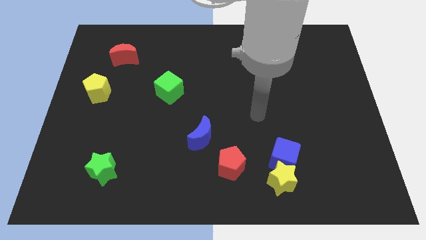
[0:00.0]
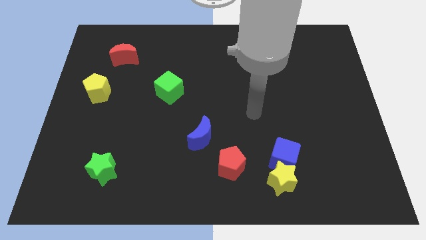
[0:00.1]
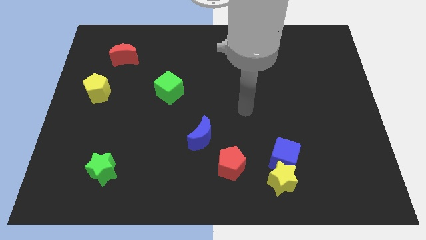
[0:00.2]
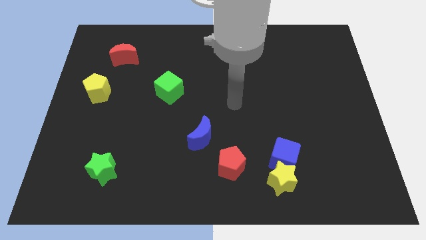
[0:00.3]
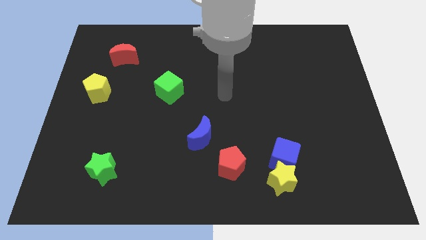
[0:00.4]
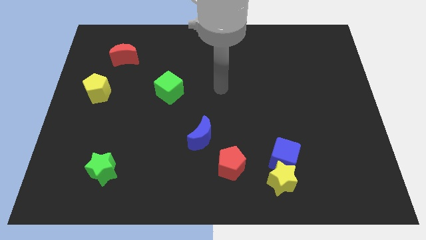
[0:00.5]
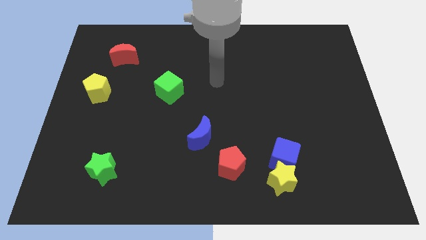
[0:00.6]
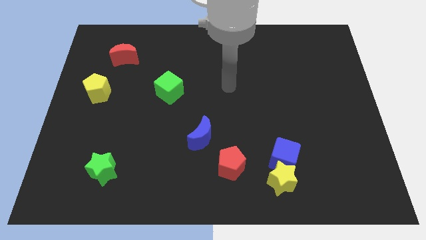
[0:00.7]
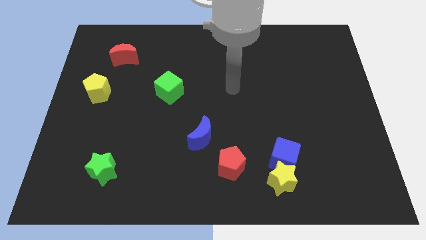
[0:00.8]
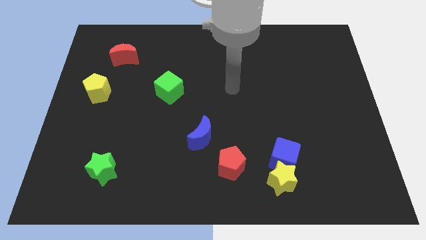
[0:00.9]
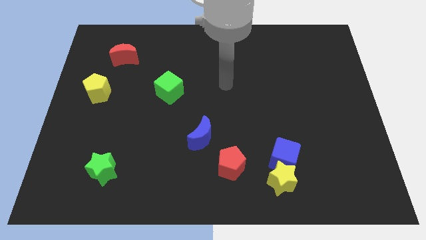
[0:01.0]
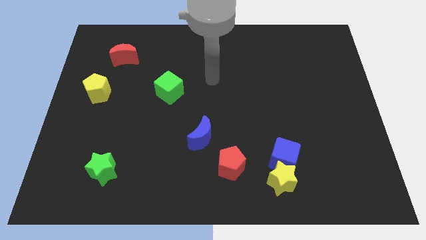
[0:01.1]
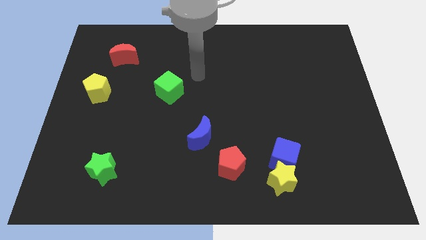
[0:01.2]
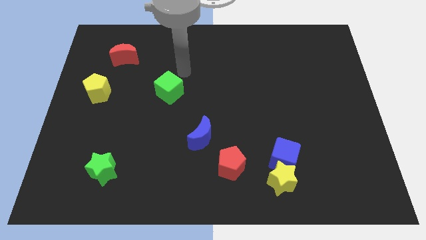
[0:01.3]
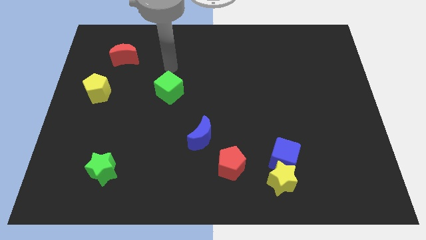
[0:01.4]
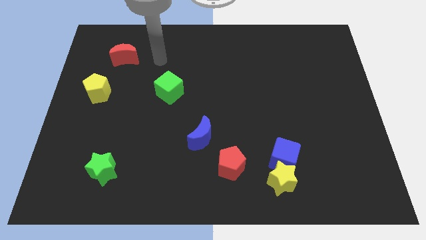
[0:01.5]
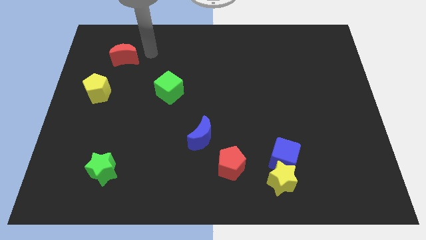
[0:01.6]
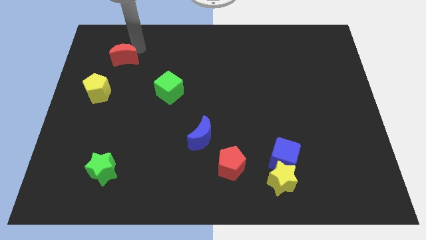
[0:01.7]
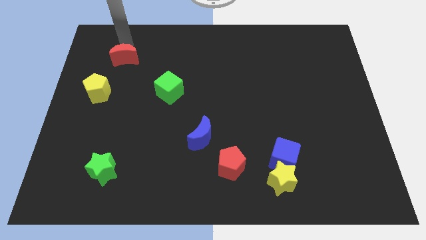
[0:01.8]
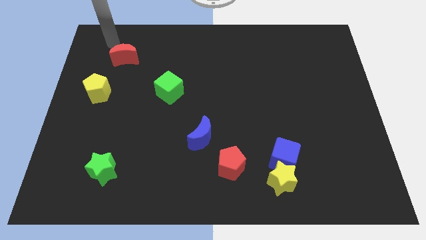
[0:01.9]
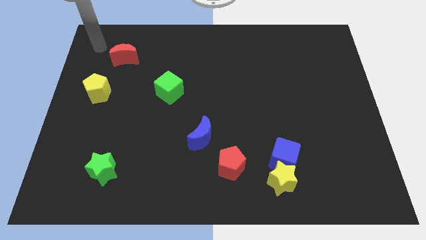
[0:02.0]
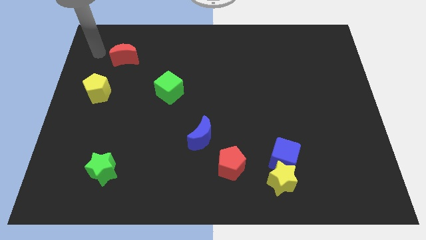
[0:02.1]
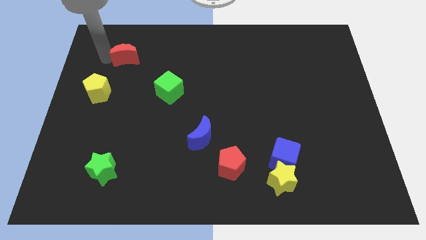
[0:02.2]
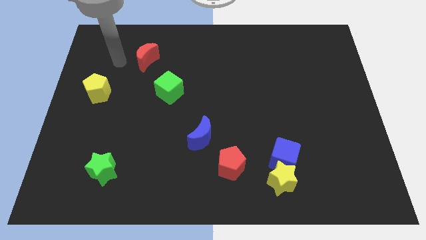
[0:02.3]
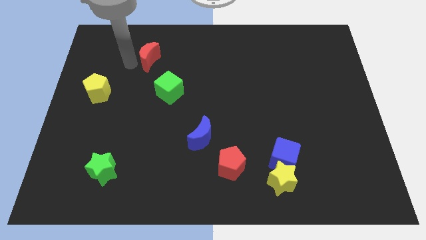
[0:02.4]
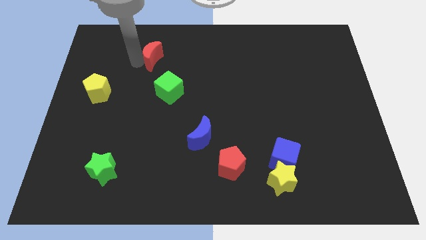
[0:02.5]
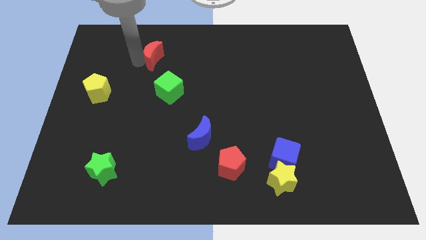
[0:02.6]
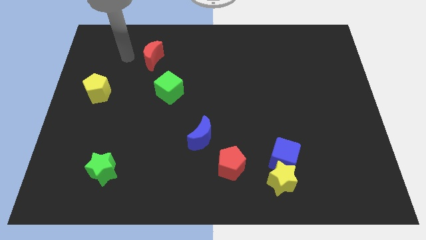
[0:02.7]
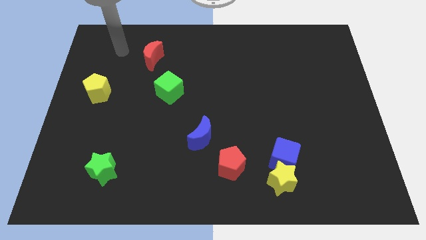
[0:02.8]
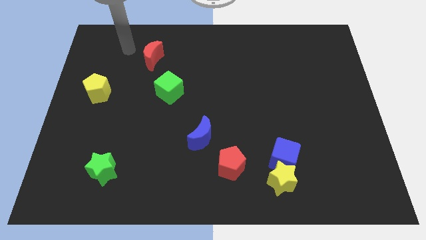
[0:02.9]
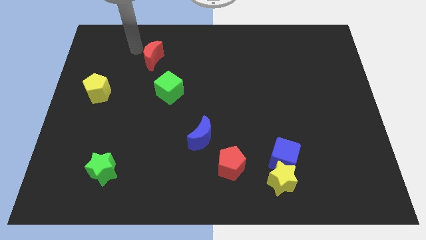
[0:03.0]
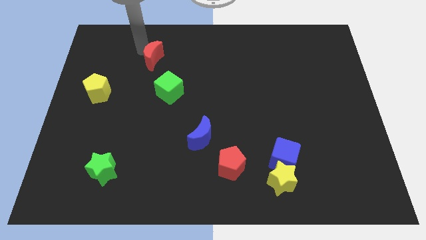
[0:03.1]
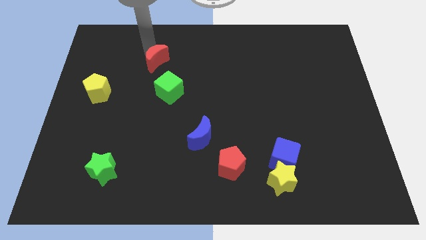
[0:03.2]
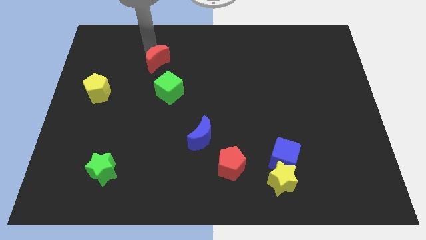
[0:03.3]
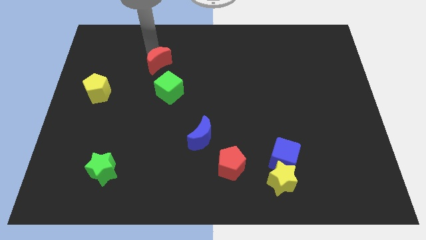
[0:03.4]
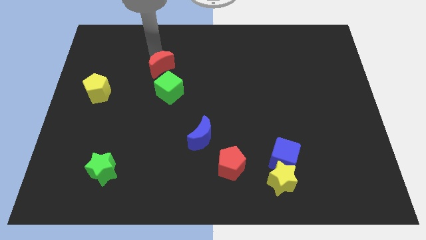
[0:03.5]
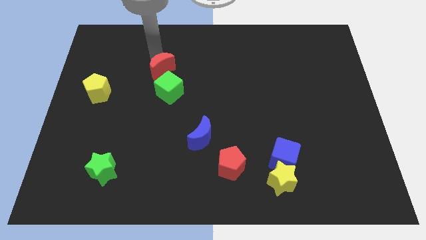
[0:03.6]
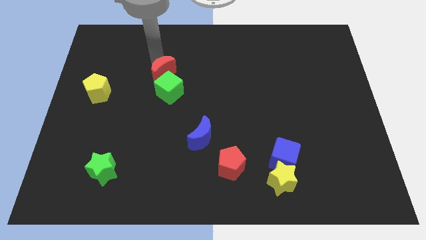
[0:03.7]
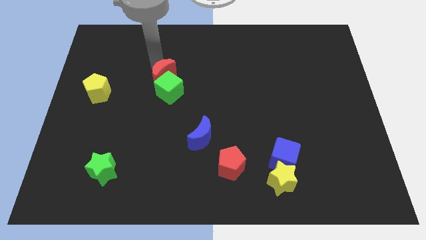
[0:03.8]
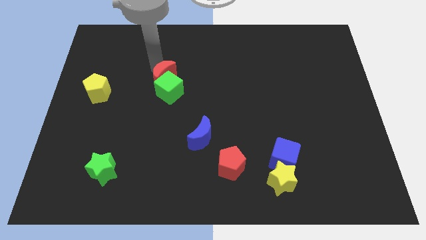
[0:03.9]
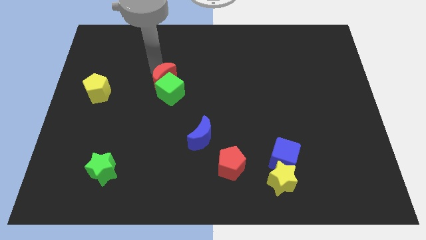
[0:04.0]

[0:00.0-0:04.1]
slide red moon into green cube

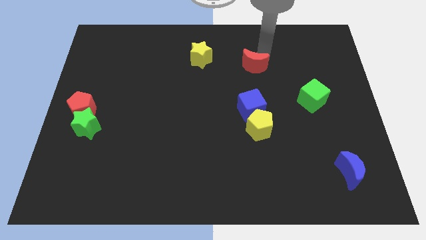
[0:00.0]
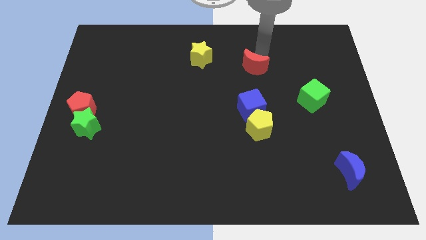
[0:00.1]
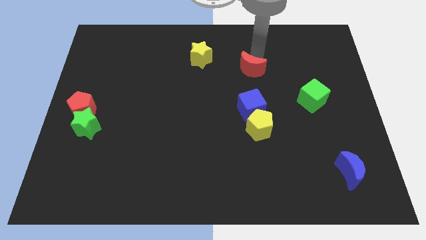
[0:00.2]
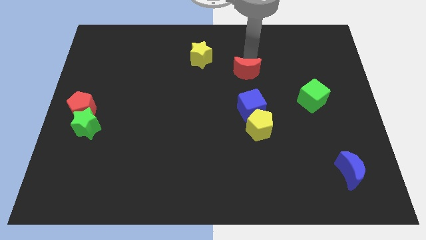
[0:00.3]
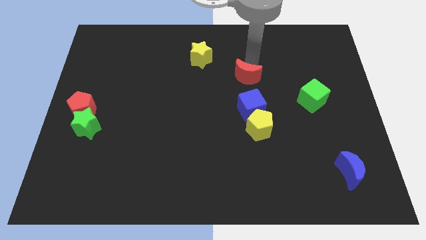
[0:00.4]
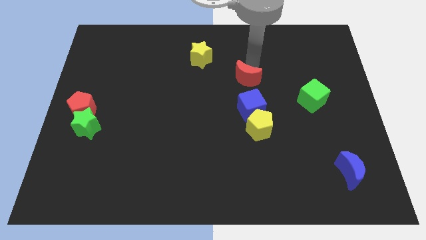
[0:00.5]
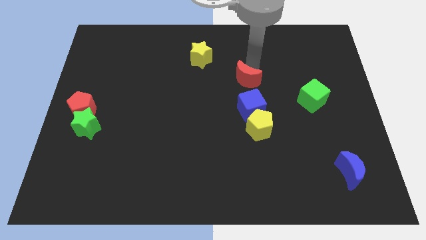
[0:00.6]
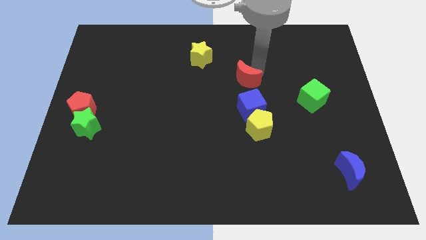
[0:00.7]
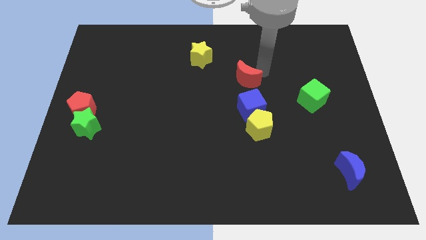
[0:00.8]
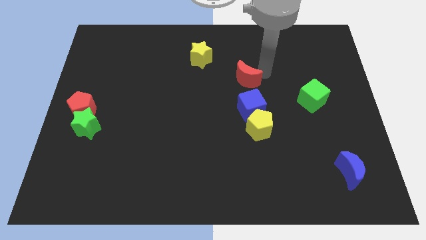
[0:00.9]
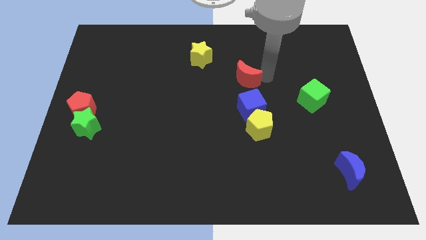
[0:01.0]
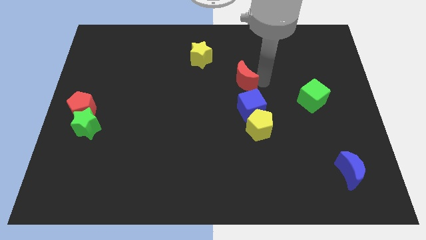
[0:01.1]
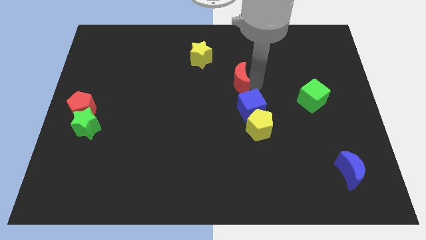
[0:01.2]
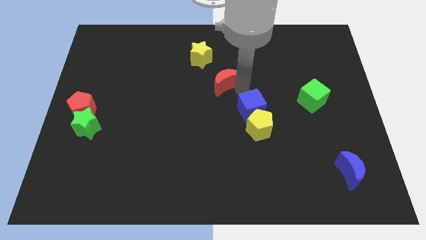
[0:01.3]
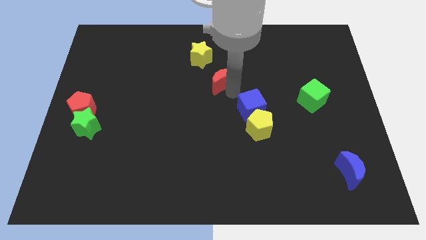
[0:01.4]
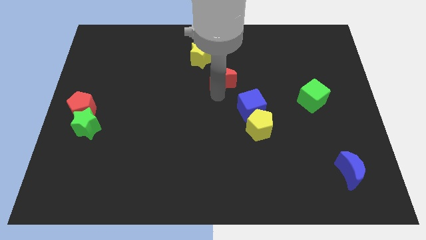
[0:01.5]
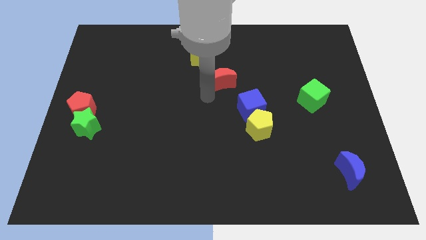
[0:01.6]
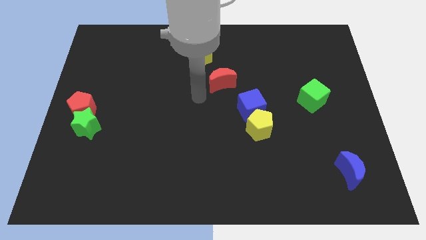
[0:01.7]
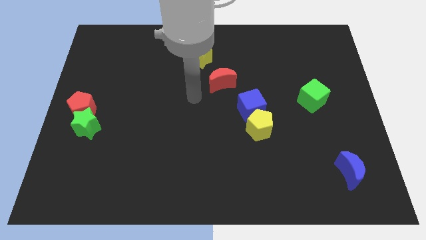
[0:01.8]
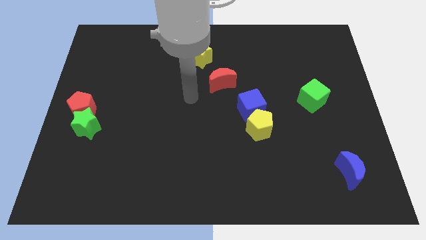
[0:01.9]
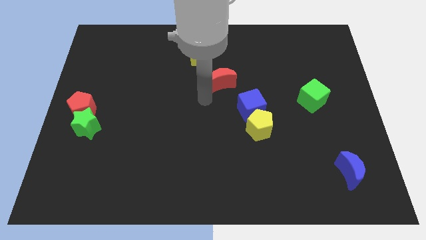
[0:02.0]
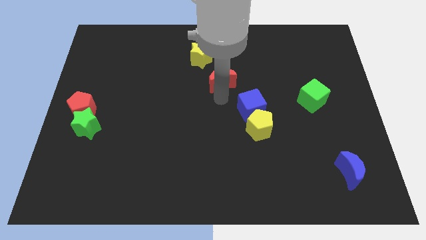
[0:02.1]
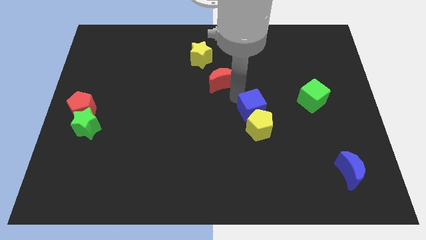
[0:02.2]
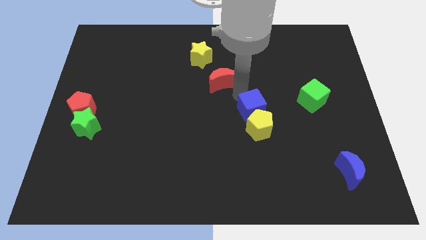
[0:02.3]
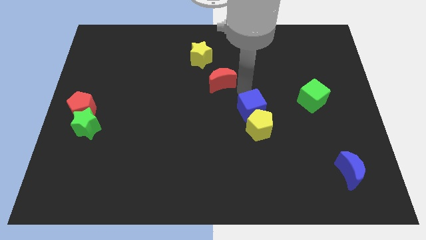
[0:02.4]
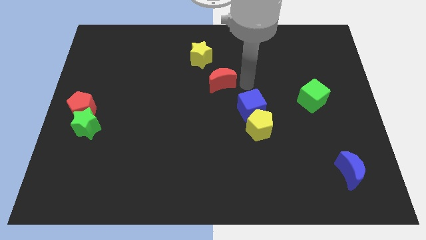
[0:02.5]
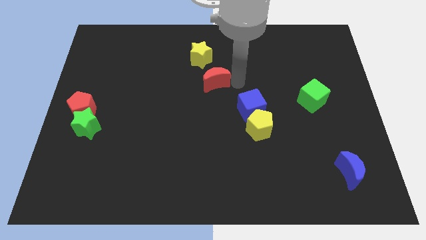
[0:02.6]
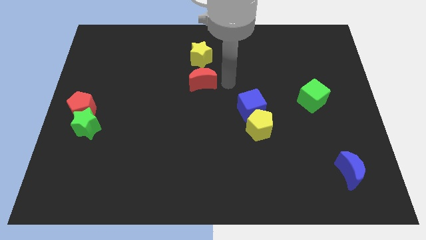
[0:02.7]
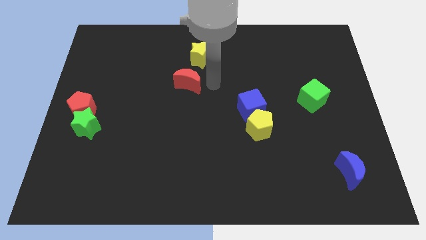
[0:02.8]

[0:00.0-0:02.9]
push red crescent below yellow star

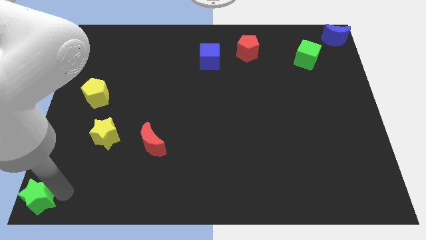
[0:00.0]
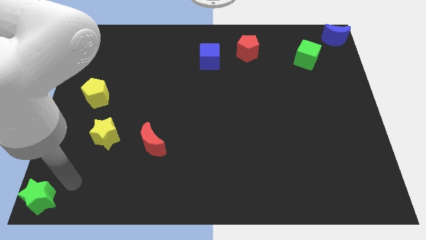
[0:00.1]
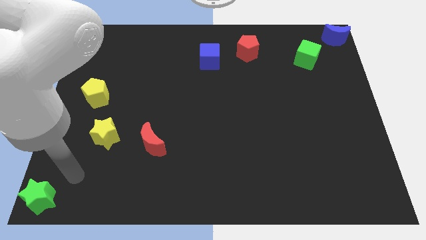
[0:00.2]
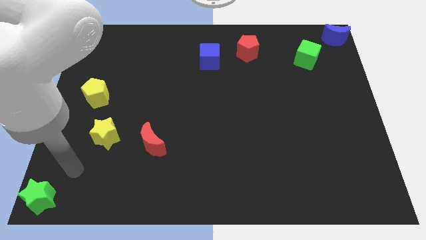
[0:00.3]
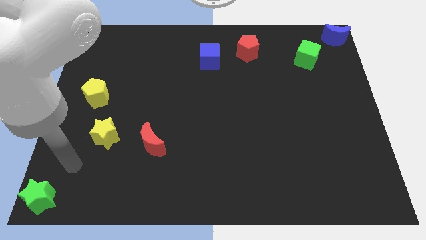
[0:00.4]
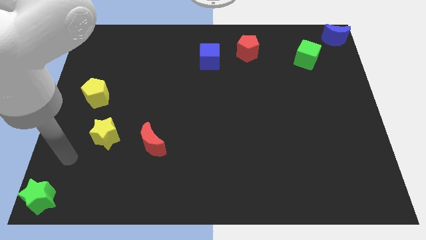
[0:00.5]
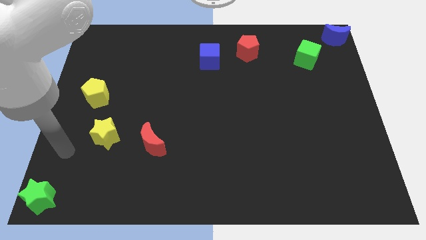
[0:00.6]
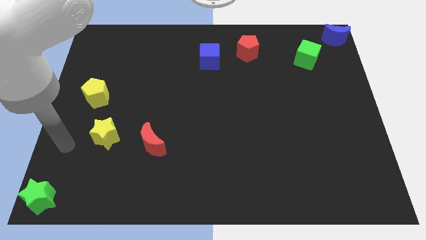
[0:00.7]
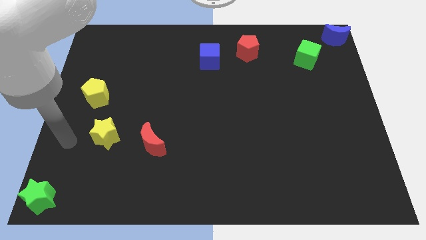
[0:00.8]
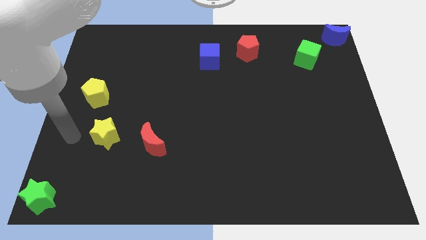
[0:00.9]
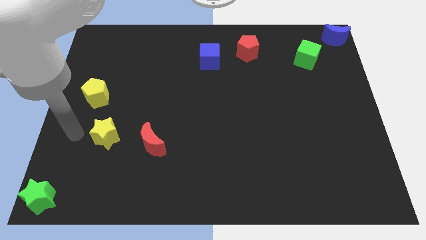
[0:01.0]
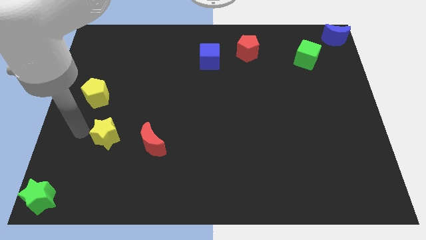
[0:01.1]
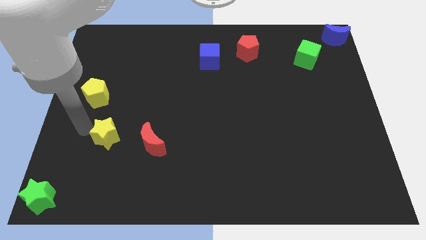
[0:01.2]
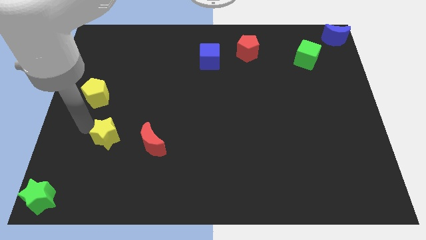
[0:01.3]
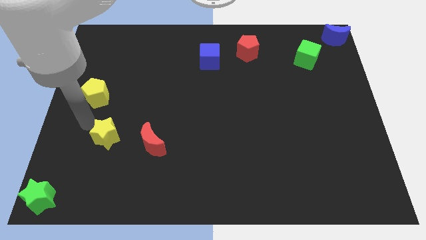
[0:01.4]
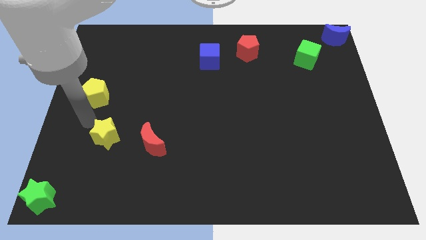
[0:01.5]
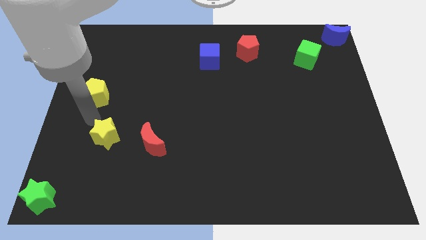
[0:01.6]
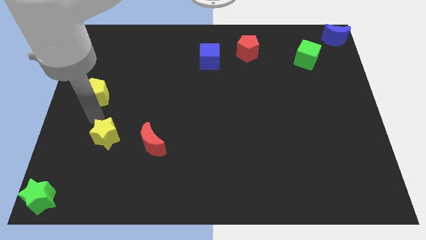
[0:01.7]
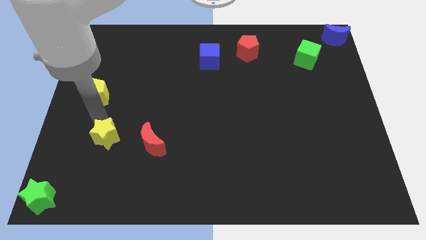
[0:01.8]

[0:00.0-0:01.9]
move your arm towards the yellow star

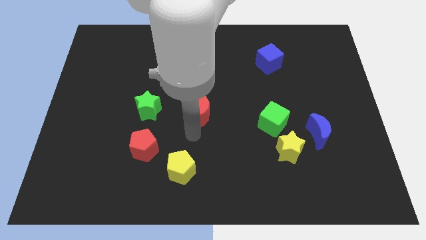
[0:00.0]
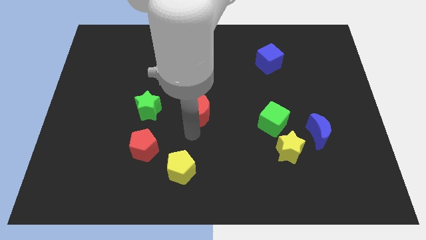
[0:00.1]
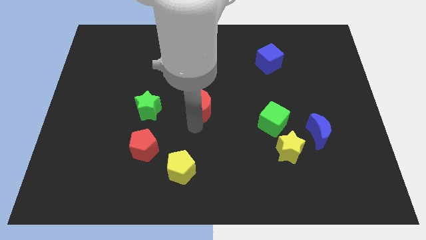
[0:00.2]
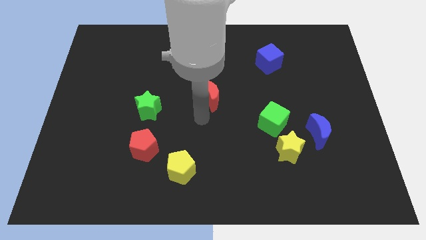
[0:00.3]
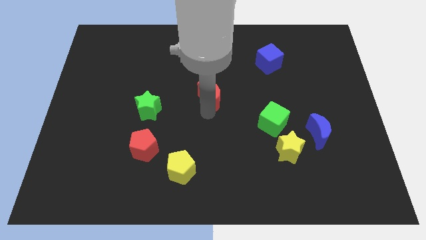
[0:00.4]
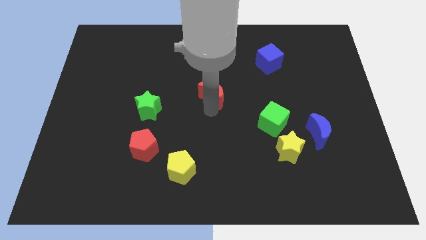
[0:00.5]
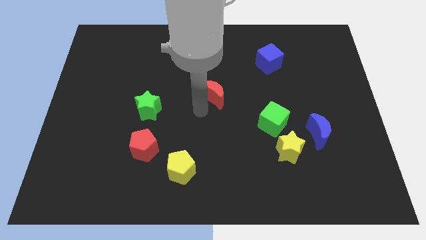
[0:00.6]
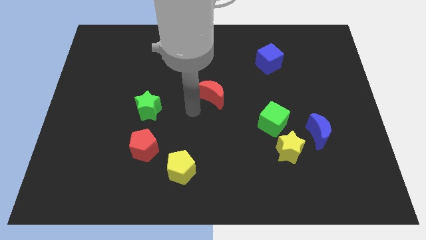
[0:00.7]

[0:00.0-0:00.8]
move the red crescent to the center of the eboard
